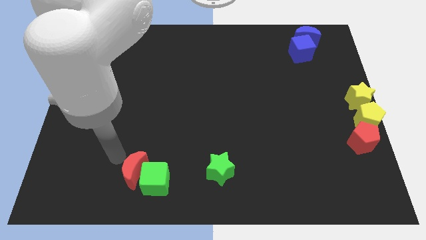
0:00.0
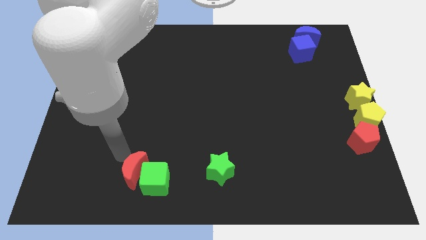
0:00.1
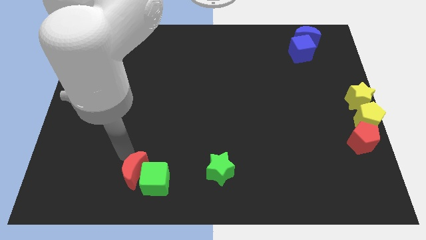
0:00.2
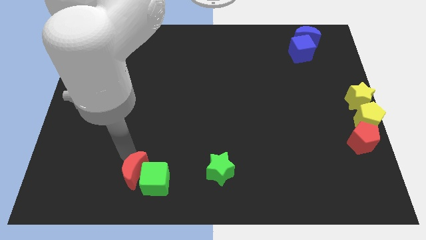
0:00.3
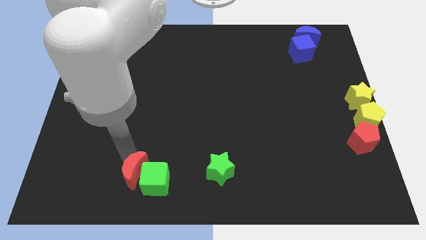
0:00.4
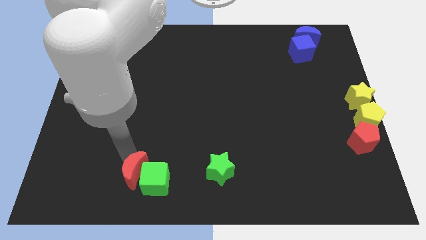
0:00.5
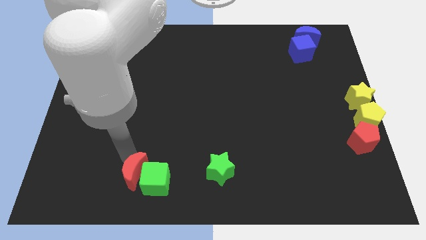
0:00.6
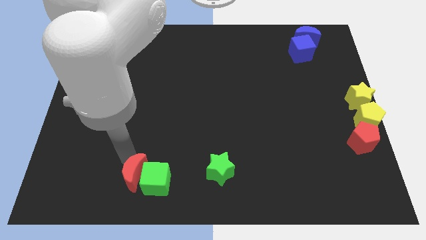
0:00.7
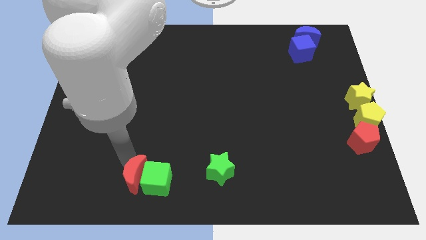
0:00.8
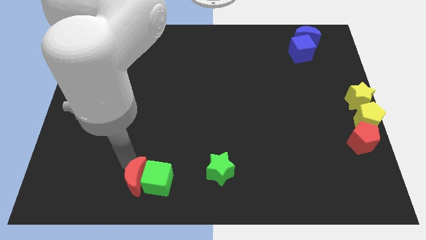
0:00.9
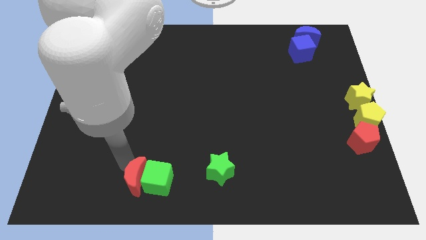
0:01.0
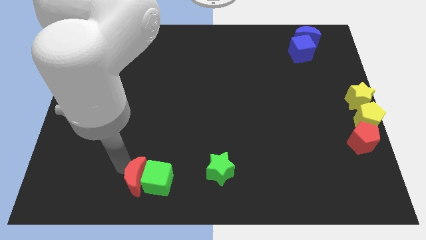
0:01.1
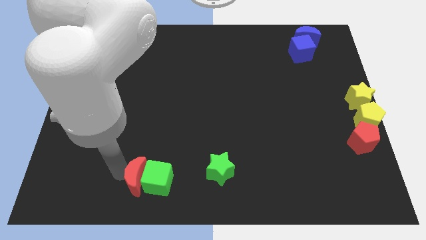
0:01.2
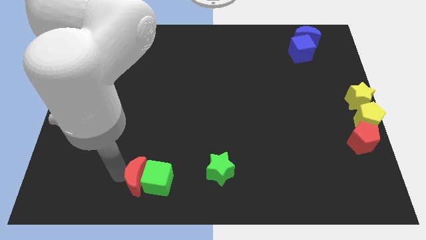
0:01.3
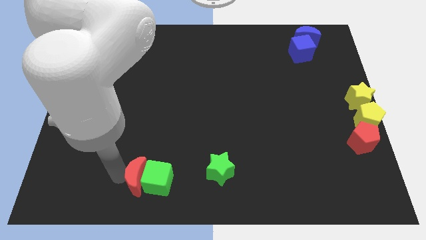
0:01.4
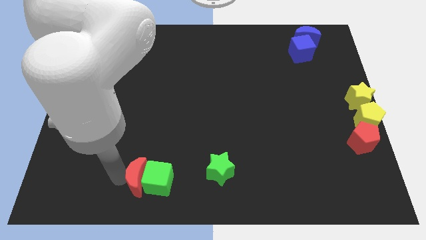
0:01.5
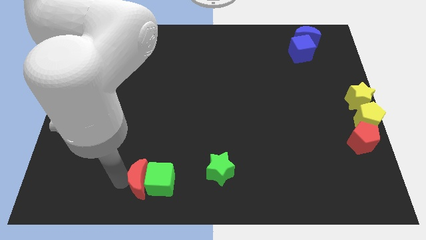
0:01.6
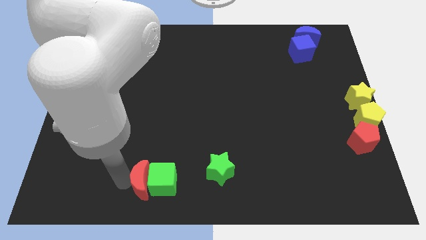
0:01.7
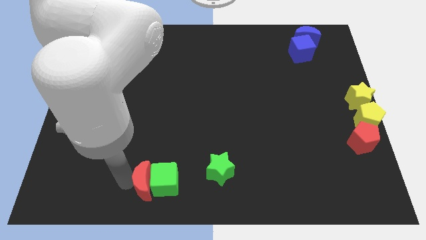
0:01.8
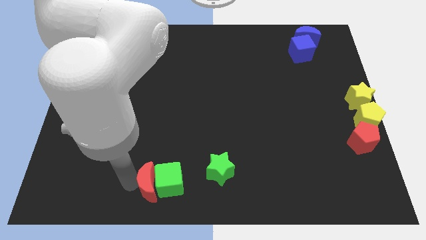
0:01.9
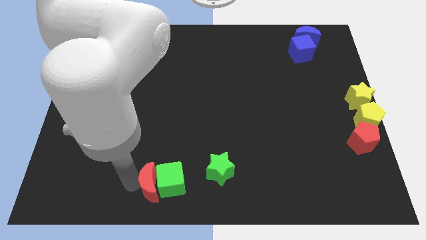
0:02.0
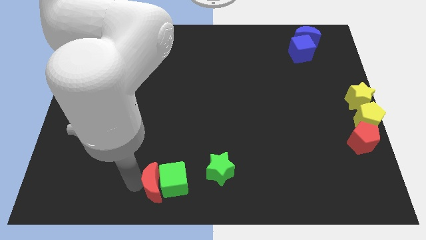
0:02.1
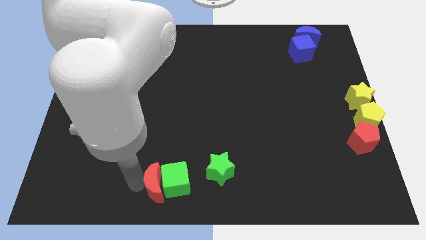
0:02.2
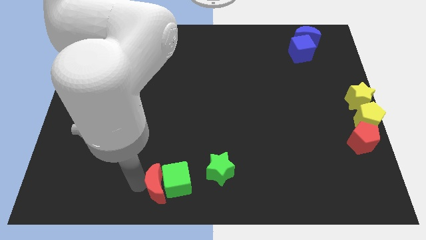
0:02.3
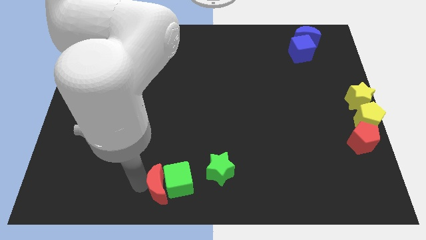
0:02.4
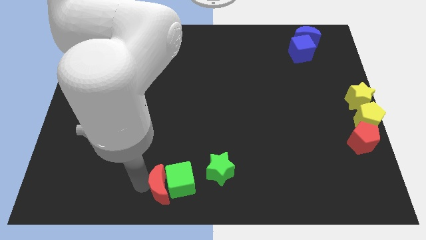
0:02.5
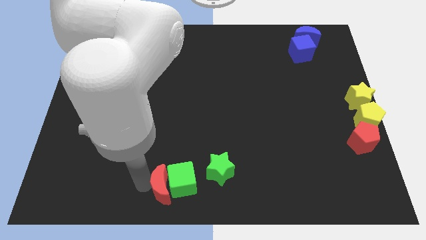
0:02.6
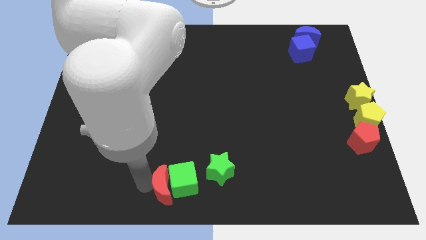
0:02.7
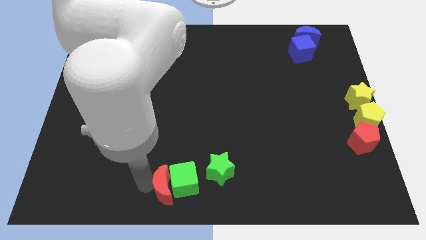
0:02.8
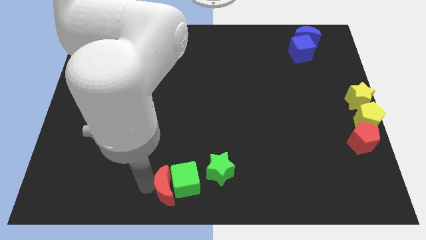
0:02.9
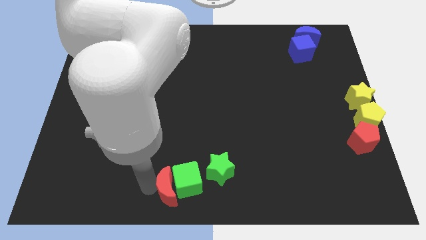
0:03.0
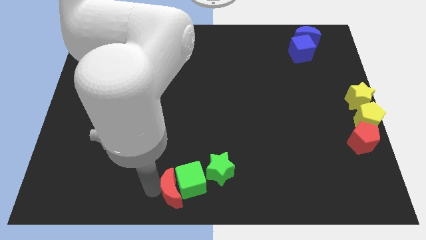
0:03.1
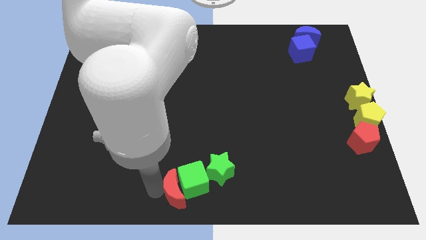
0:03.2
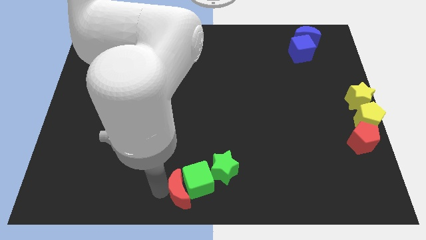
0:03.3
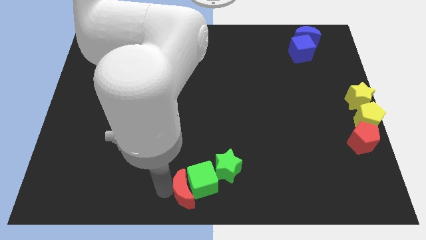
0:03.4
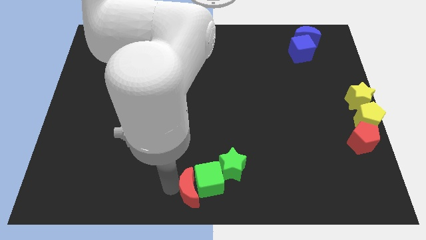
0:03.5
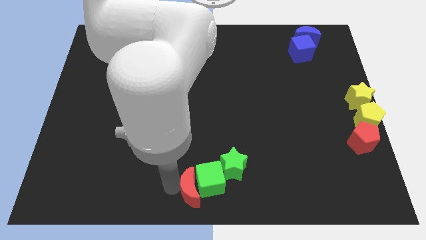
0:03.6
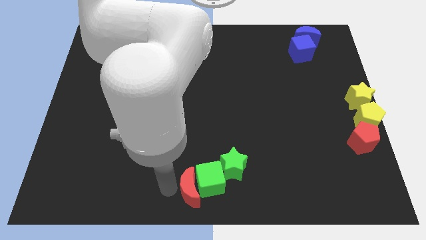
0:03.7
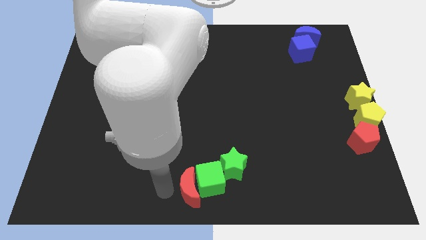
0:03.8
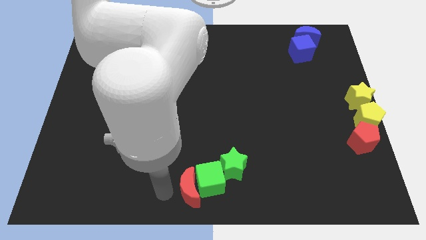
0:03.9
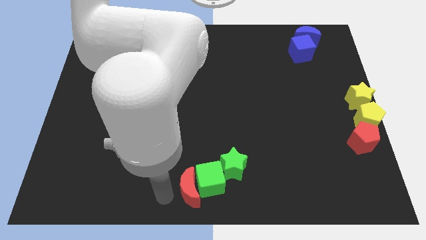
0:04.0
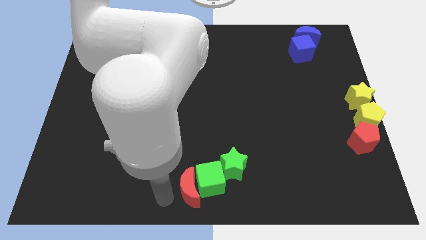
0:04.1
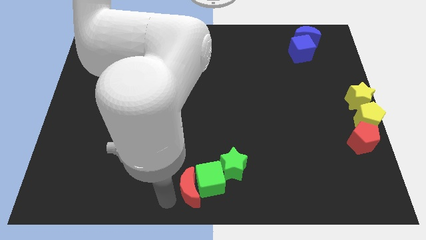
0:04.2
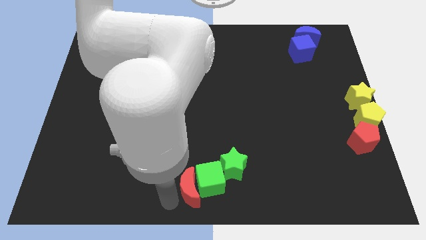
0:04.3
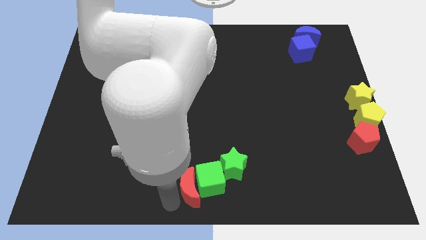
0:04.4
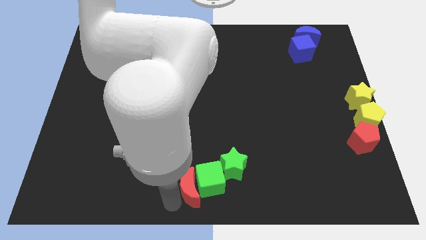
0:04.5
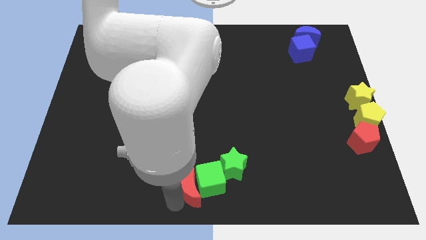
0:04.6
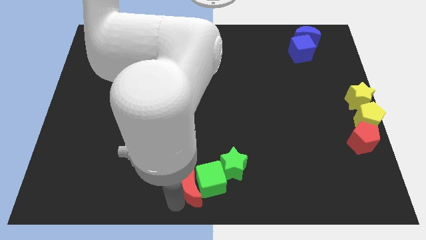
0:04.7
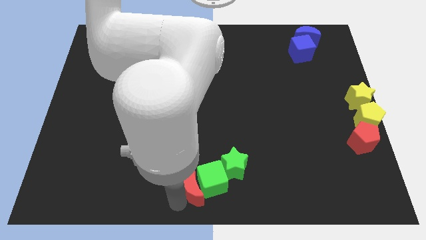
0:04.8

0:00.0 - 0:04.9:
move the green cube into green star with red crescent

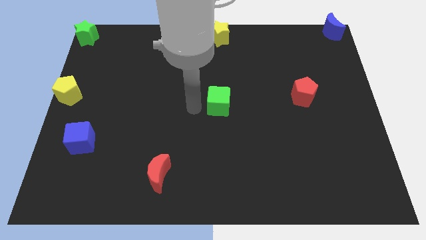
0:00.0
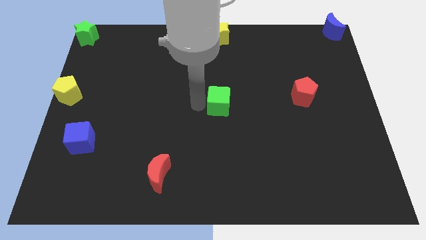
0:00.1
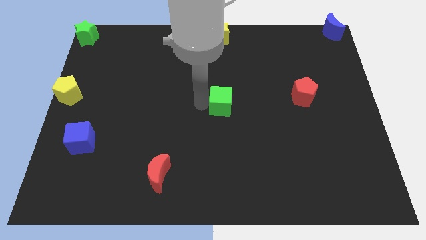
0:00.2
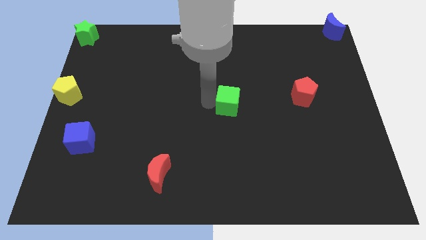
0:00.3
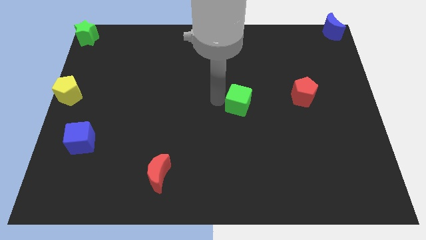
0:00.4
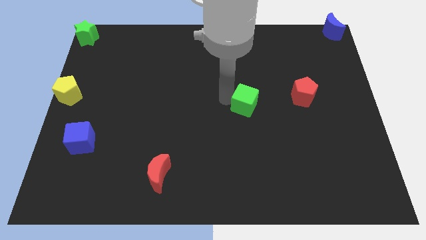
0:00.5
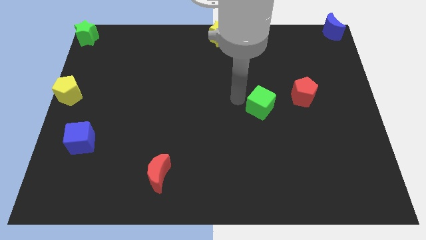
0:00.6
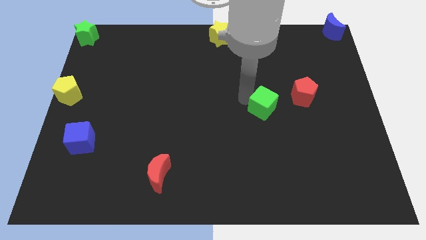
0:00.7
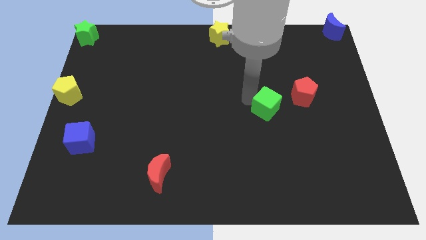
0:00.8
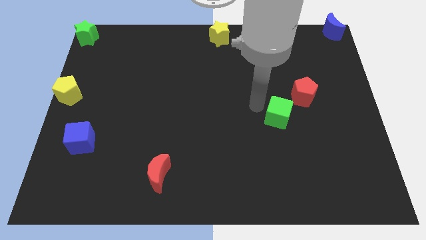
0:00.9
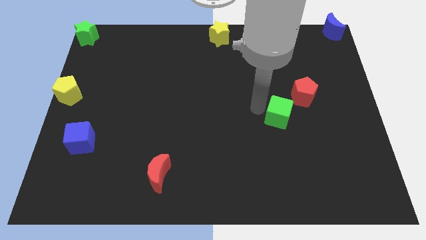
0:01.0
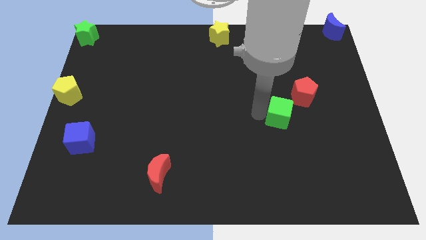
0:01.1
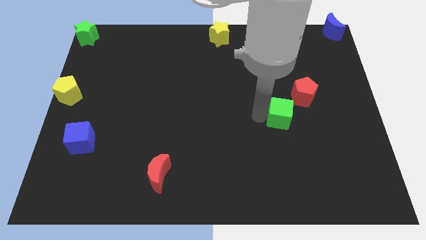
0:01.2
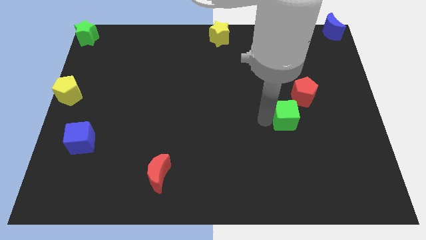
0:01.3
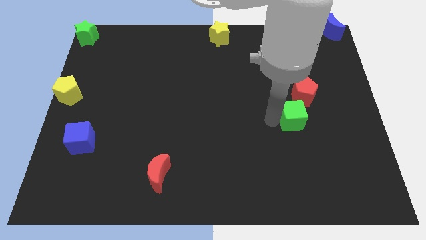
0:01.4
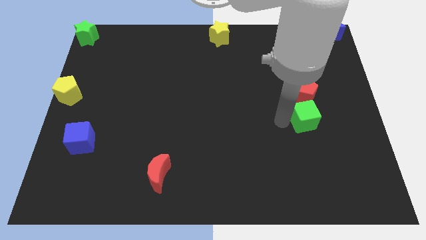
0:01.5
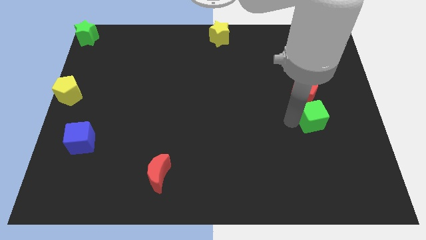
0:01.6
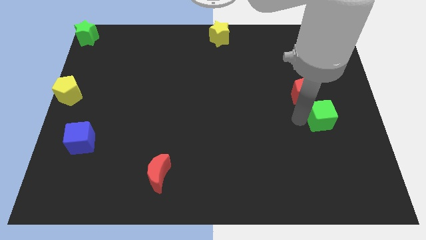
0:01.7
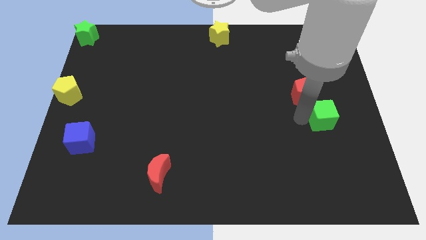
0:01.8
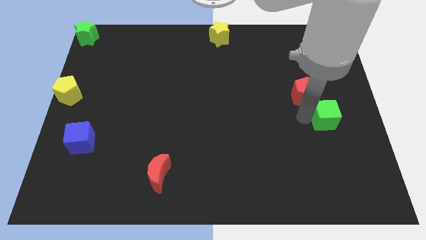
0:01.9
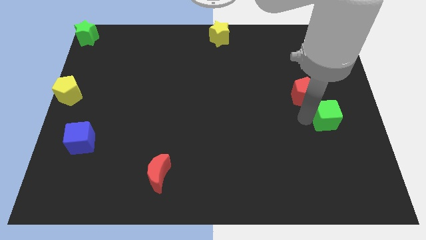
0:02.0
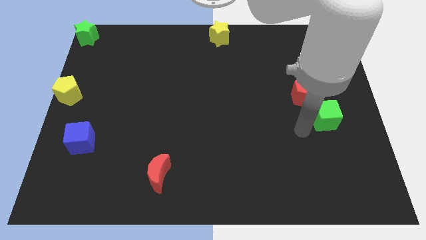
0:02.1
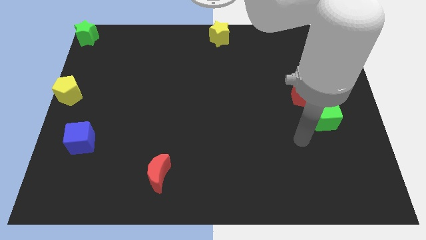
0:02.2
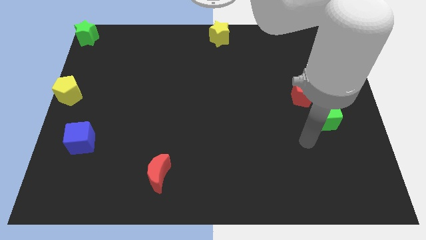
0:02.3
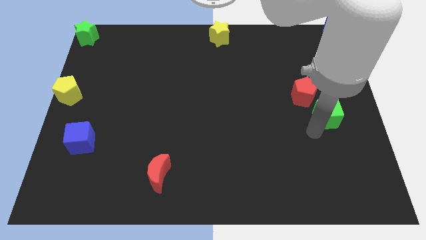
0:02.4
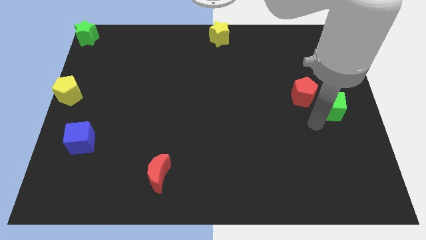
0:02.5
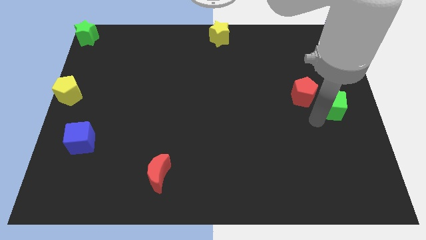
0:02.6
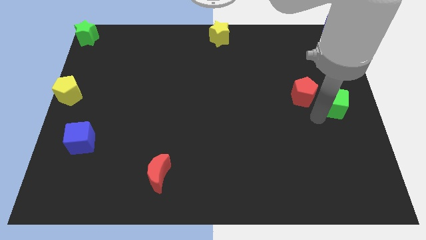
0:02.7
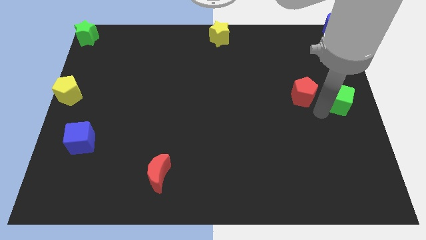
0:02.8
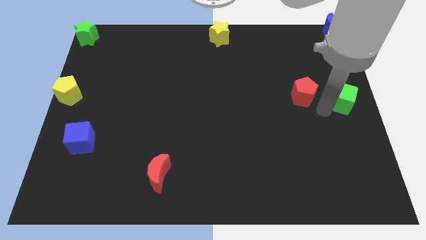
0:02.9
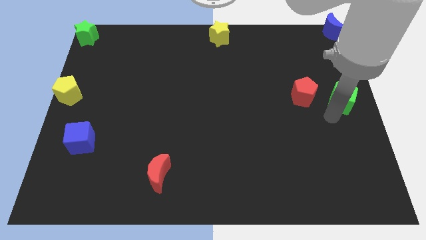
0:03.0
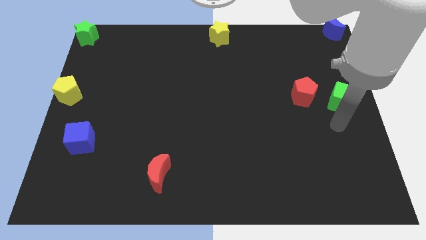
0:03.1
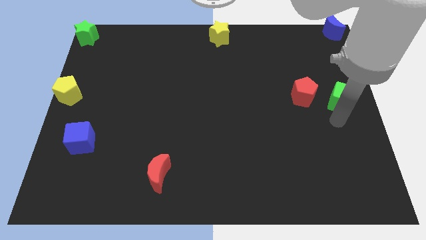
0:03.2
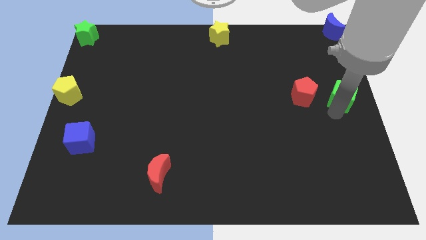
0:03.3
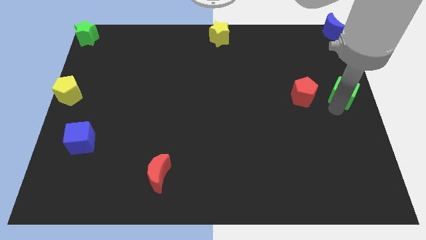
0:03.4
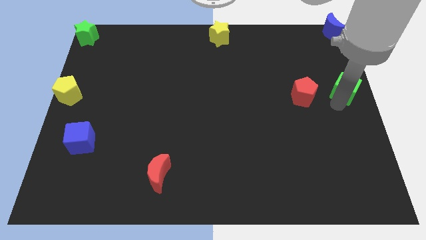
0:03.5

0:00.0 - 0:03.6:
move the green cube to the right of the red pentagon

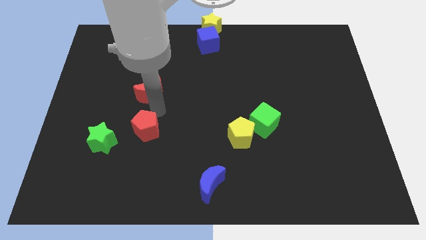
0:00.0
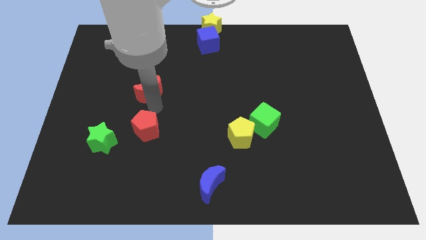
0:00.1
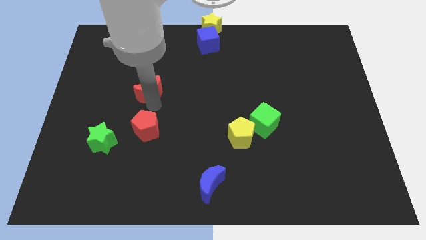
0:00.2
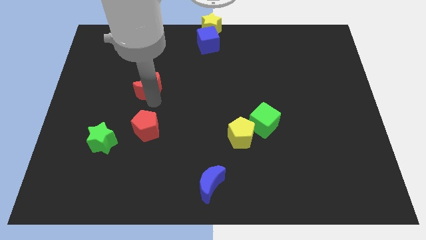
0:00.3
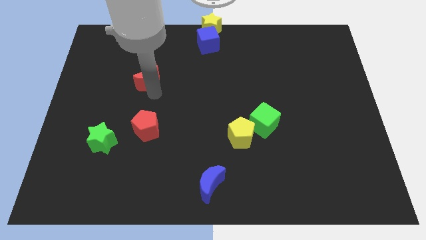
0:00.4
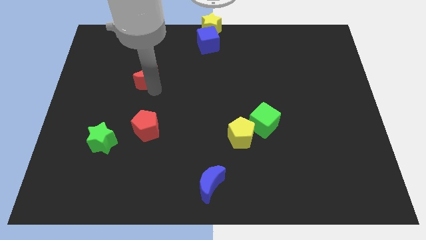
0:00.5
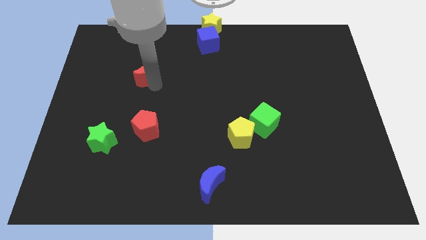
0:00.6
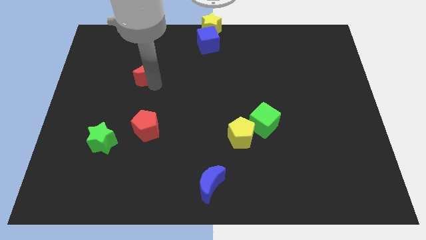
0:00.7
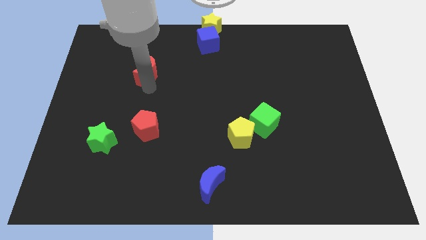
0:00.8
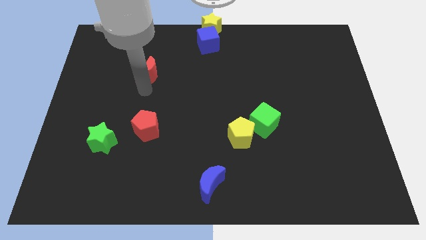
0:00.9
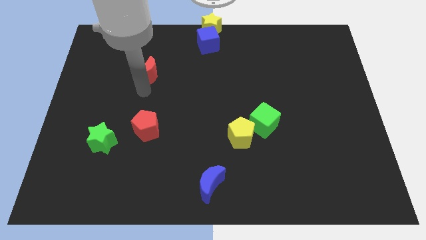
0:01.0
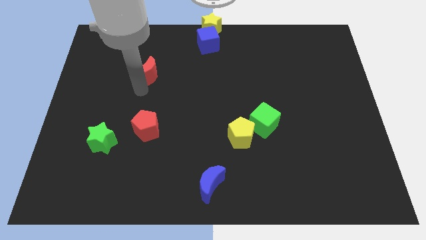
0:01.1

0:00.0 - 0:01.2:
slide the red crescent slightly towards up
